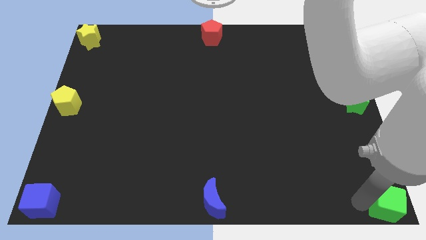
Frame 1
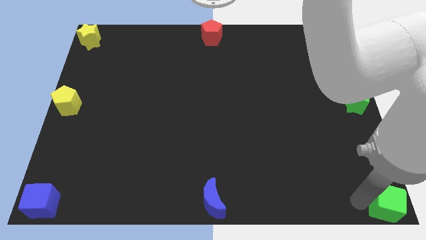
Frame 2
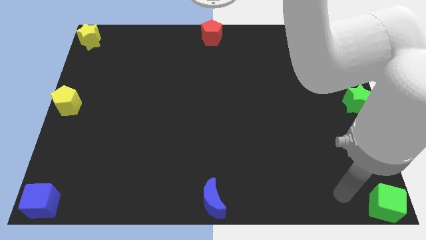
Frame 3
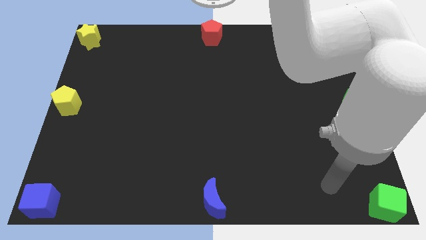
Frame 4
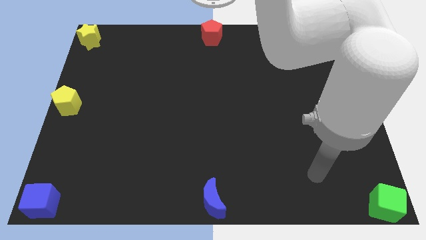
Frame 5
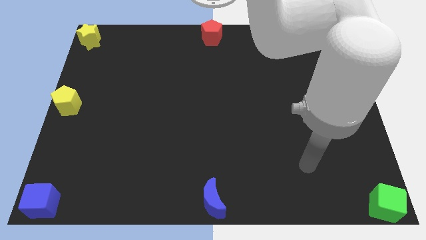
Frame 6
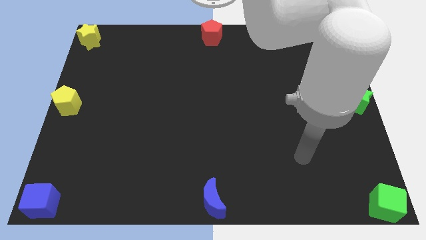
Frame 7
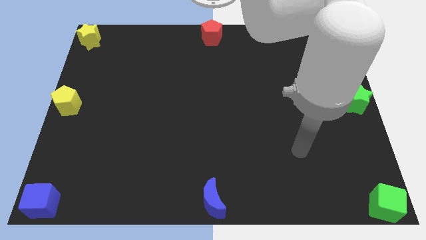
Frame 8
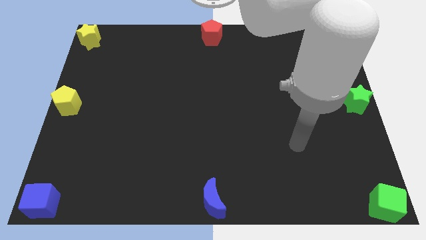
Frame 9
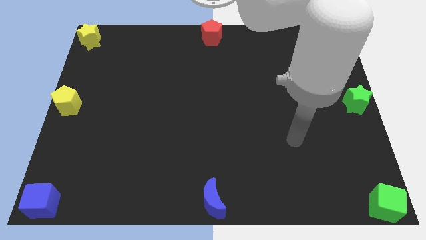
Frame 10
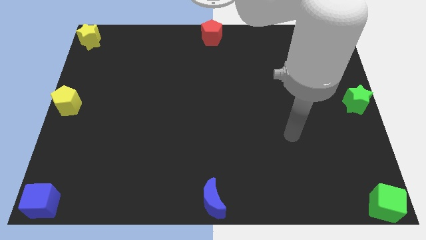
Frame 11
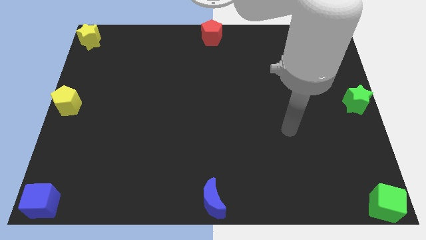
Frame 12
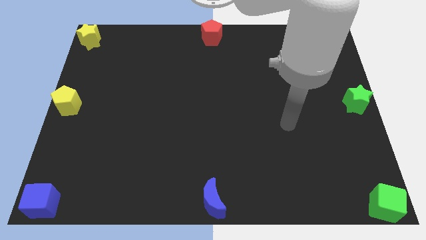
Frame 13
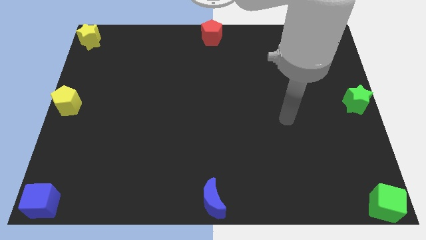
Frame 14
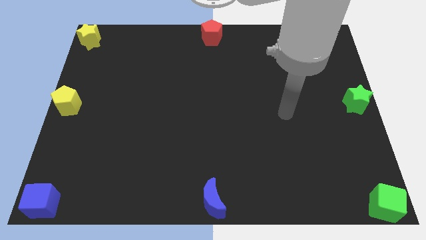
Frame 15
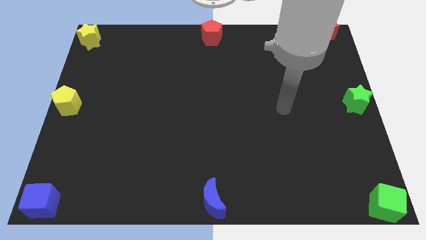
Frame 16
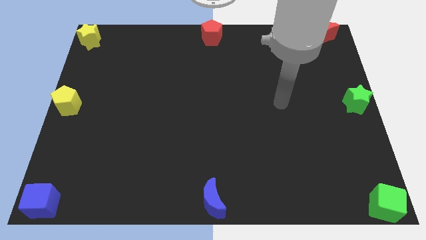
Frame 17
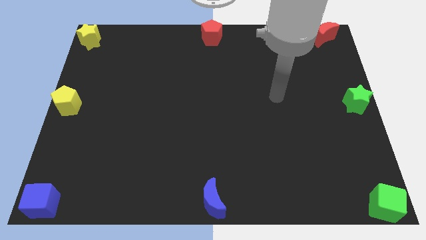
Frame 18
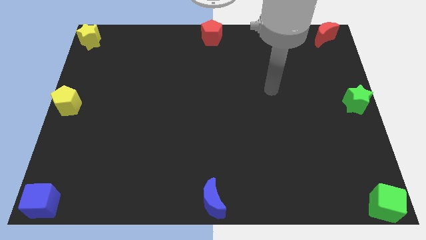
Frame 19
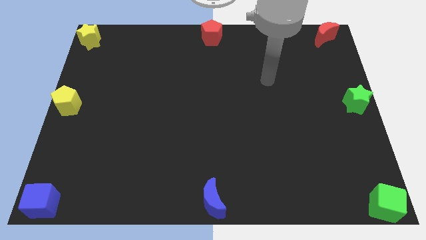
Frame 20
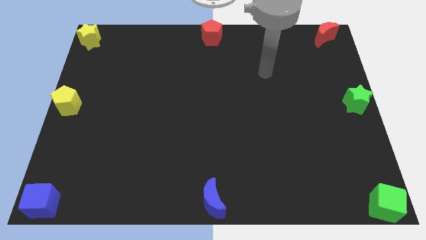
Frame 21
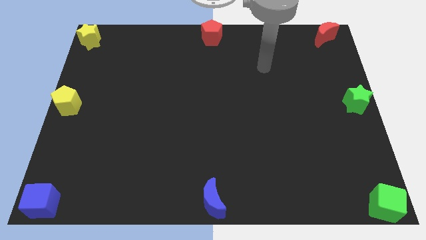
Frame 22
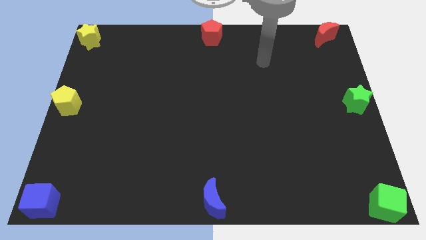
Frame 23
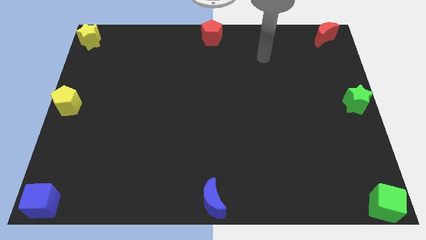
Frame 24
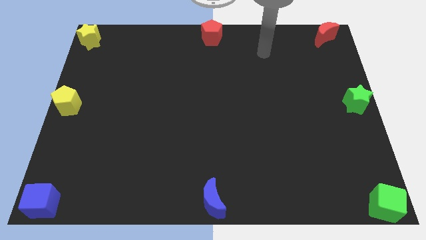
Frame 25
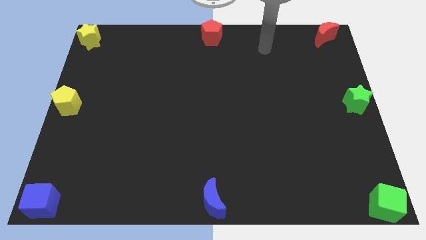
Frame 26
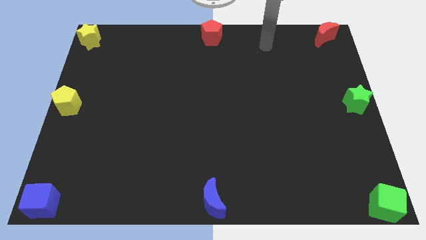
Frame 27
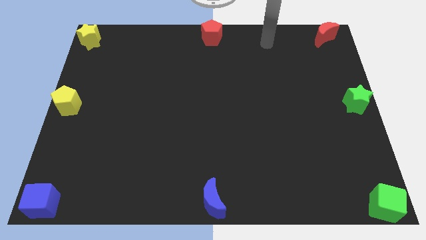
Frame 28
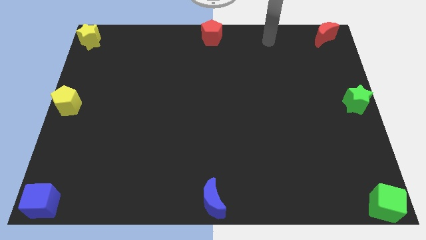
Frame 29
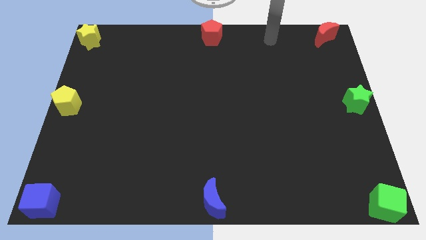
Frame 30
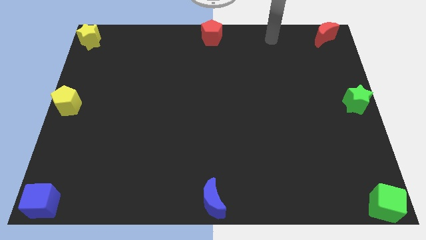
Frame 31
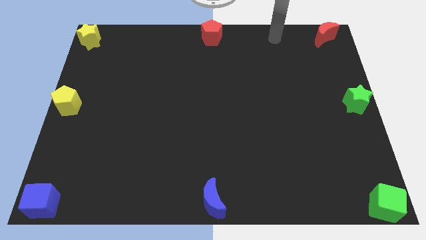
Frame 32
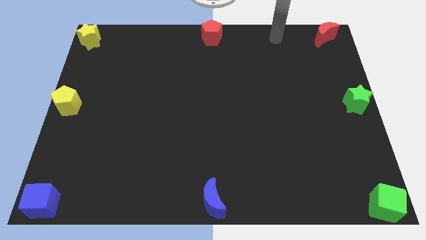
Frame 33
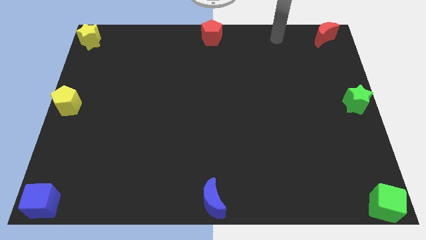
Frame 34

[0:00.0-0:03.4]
move your arm away from the green cube

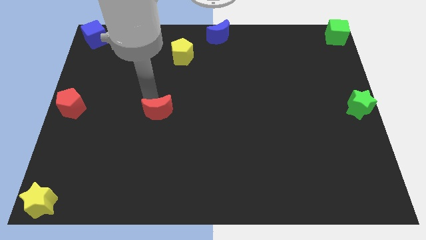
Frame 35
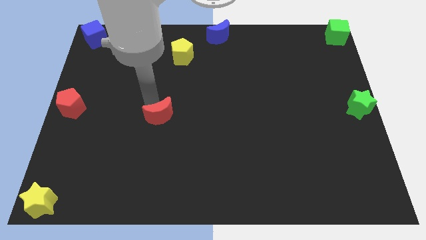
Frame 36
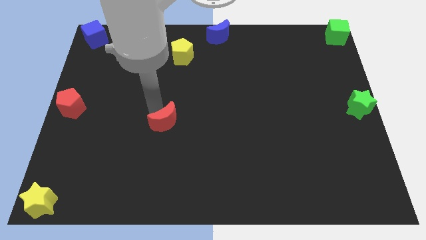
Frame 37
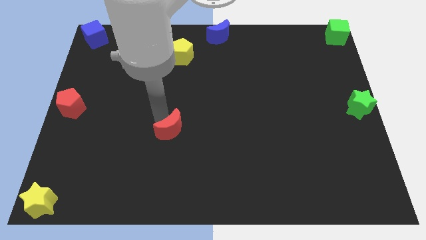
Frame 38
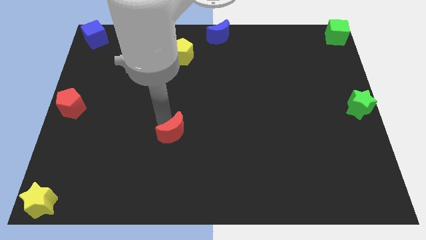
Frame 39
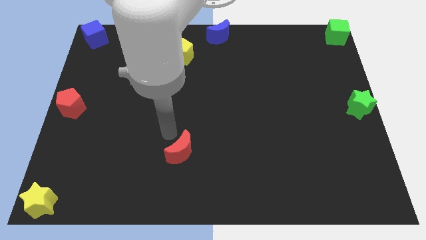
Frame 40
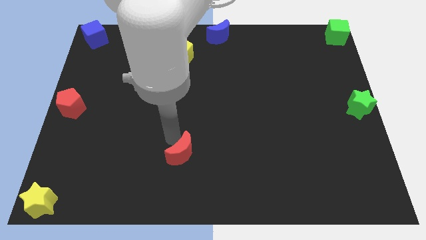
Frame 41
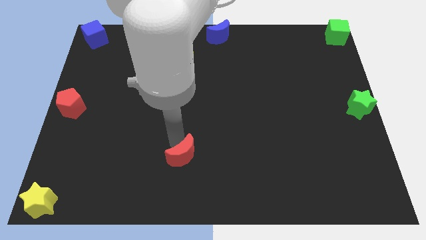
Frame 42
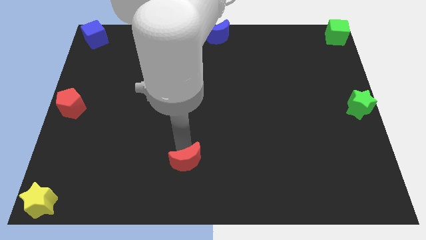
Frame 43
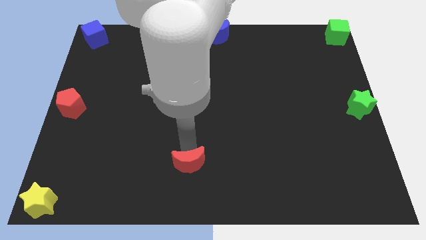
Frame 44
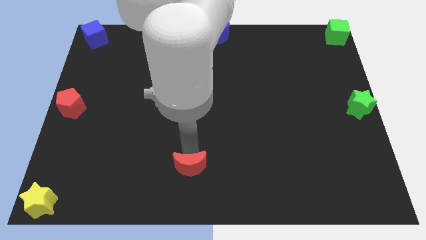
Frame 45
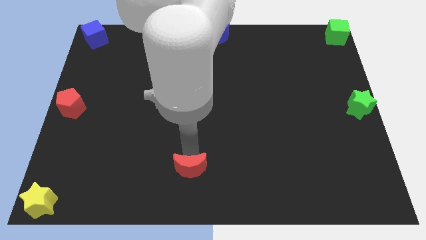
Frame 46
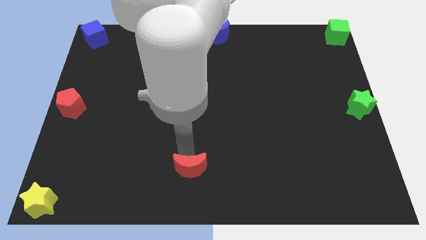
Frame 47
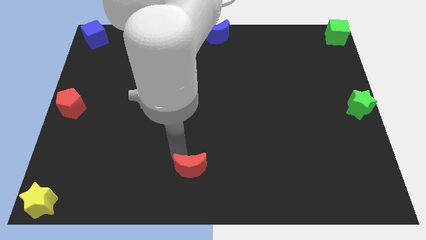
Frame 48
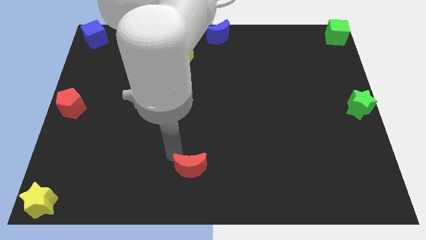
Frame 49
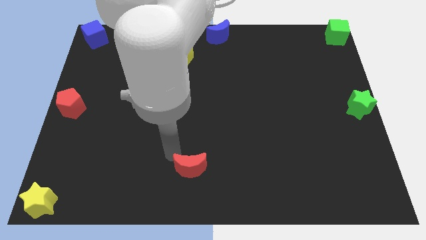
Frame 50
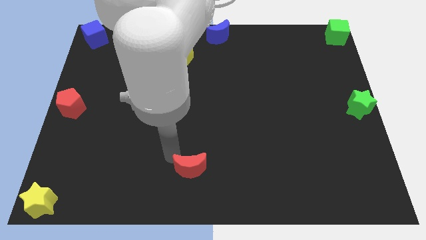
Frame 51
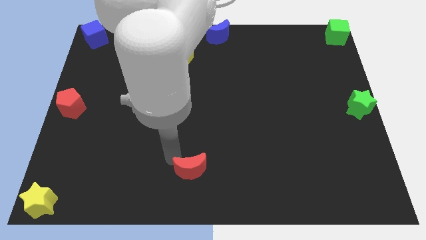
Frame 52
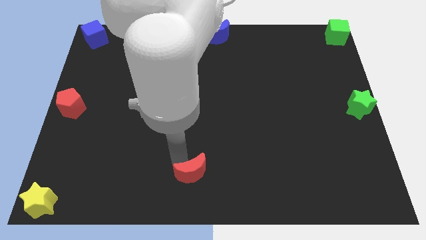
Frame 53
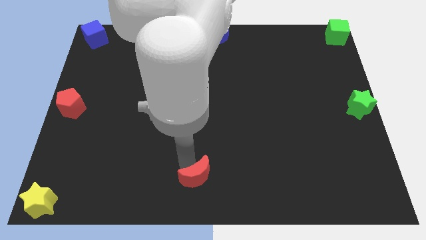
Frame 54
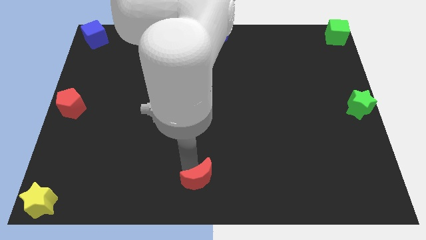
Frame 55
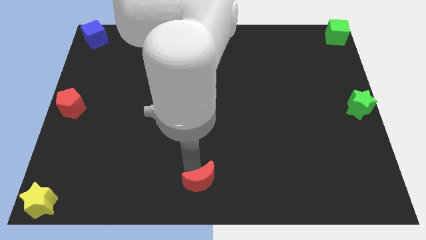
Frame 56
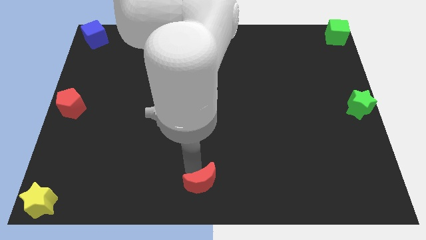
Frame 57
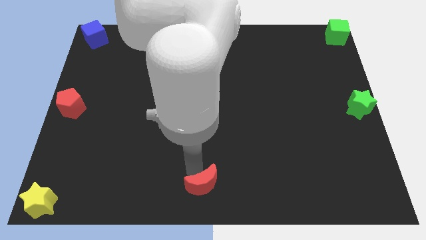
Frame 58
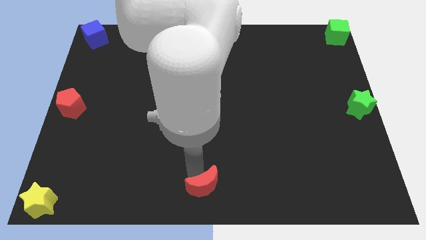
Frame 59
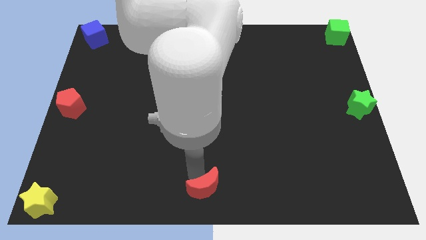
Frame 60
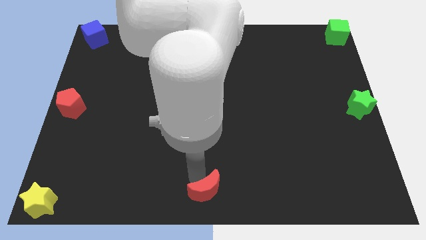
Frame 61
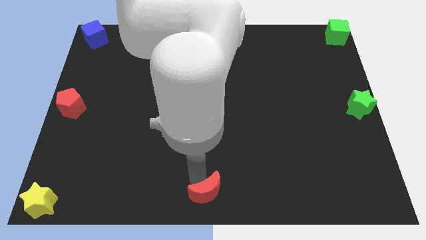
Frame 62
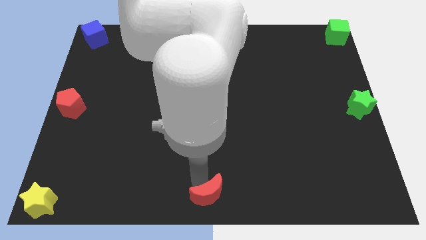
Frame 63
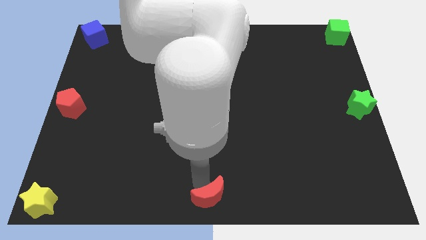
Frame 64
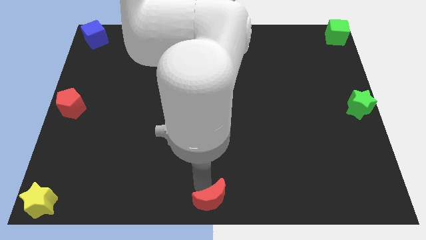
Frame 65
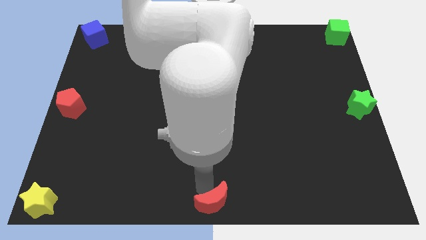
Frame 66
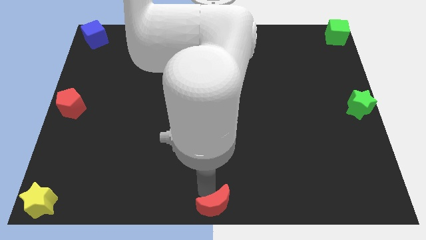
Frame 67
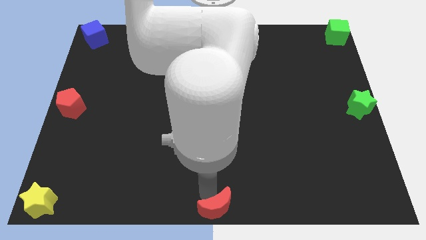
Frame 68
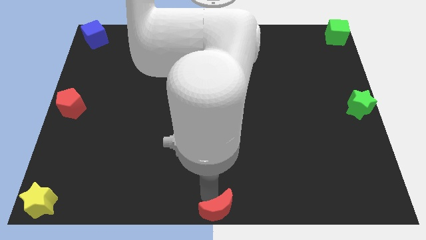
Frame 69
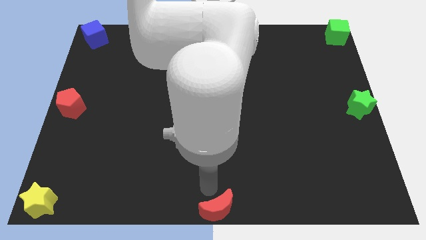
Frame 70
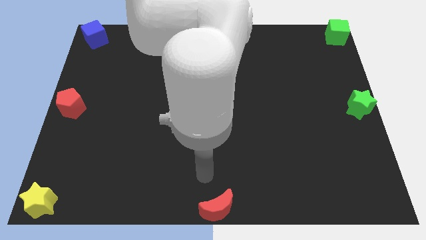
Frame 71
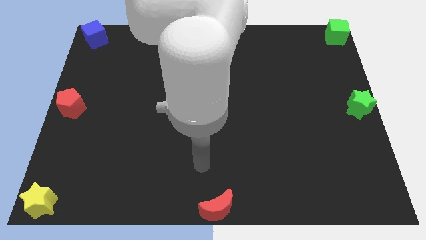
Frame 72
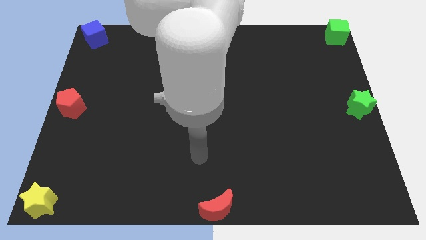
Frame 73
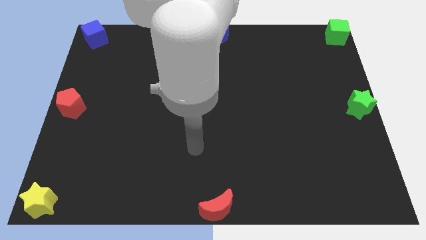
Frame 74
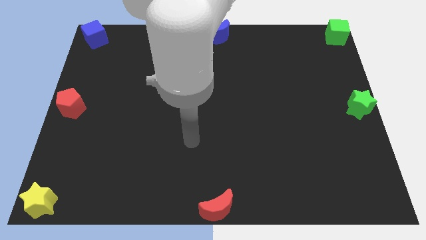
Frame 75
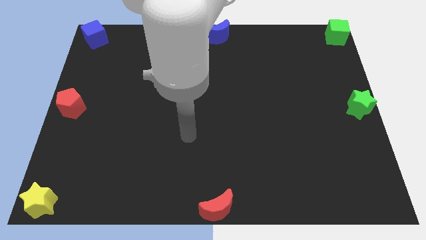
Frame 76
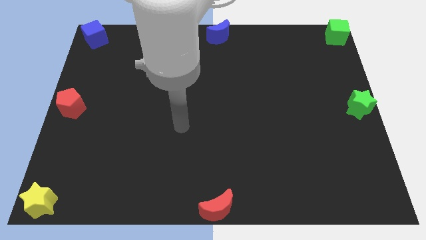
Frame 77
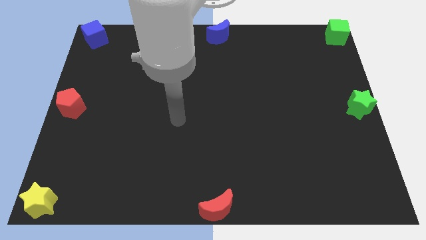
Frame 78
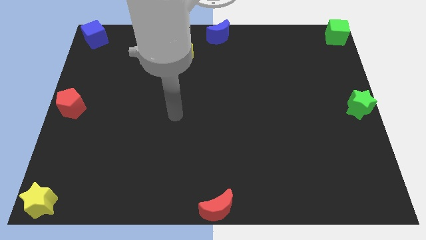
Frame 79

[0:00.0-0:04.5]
move the red crescent on the bottom centre of the board

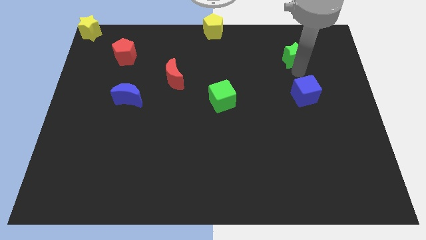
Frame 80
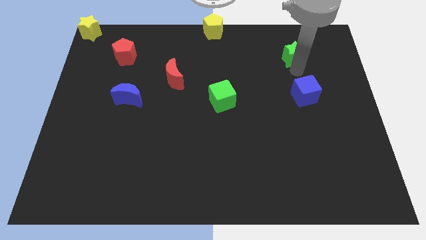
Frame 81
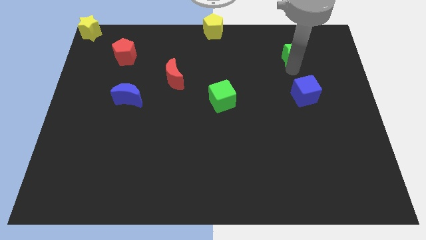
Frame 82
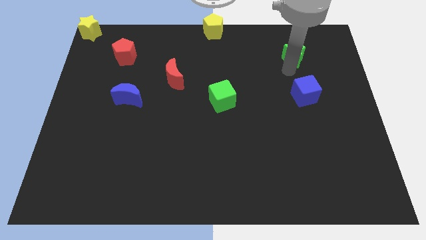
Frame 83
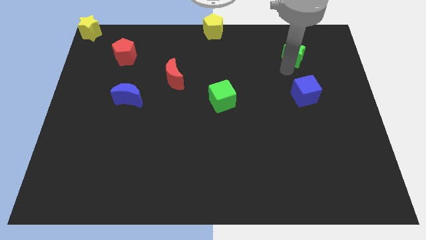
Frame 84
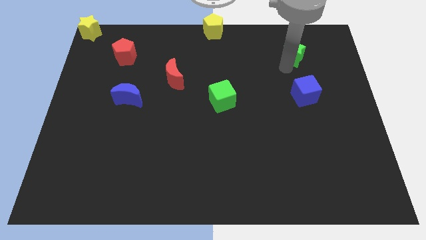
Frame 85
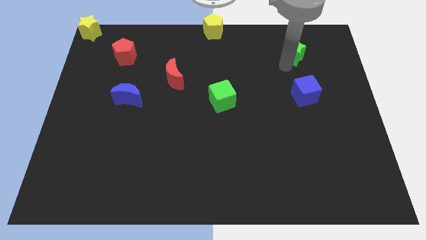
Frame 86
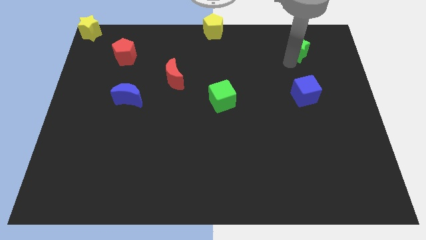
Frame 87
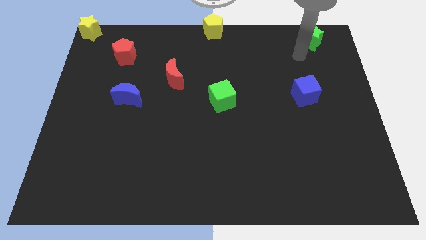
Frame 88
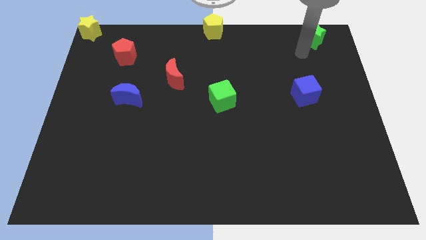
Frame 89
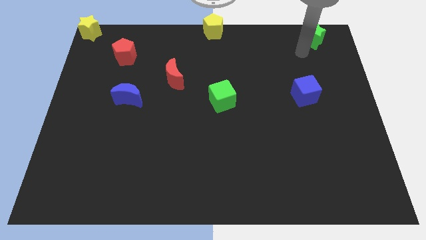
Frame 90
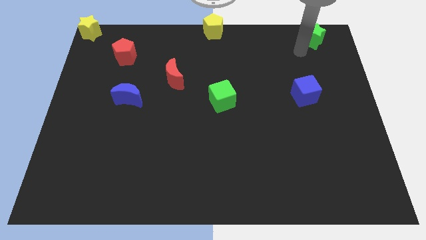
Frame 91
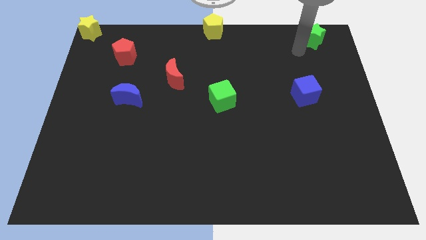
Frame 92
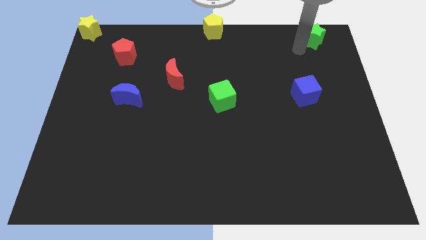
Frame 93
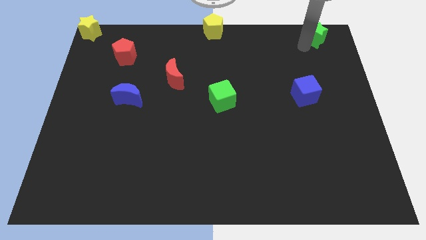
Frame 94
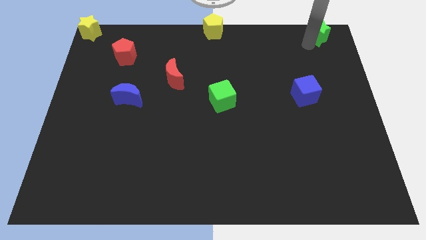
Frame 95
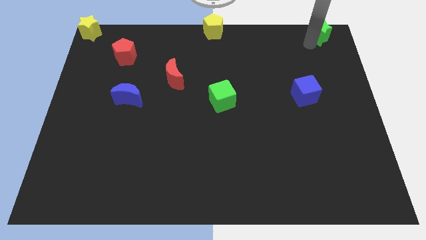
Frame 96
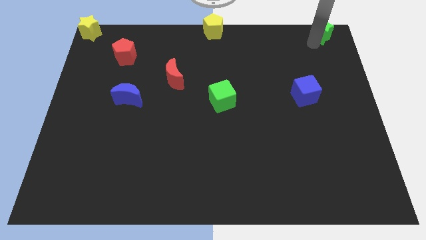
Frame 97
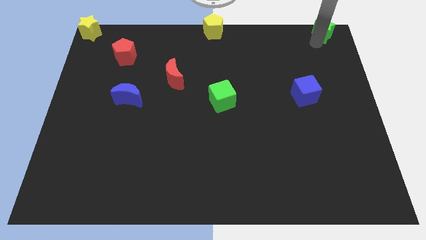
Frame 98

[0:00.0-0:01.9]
place the green star to top right
